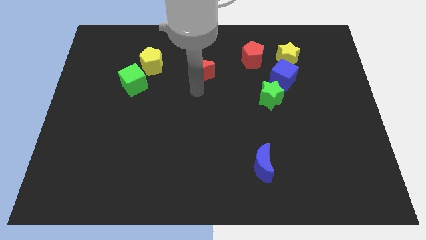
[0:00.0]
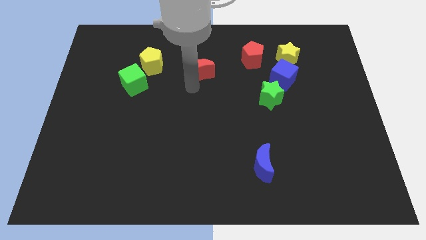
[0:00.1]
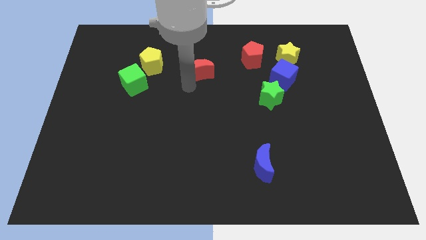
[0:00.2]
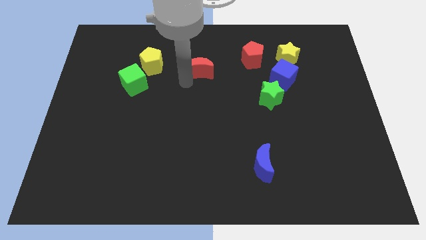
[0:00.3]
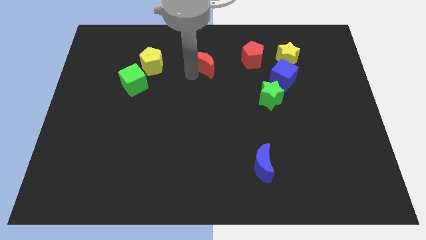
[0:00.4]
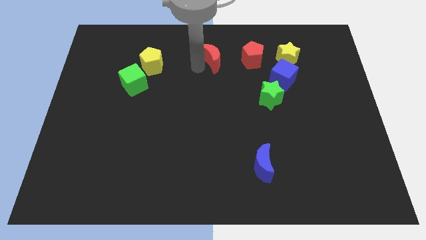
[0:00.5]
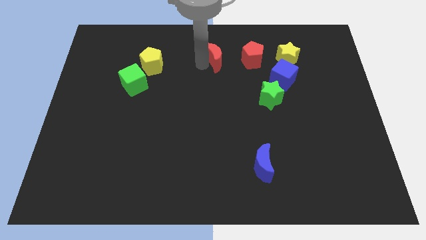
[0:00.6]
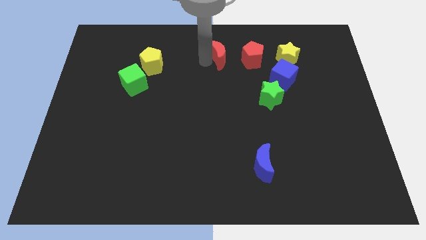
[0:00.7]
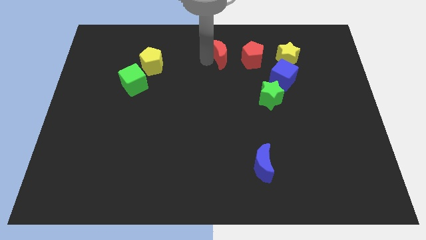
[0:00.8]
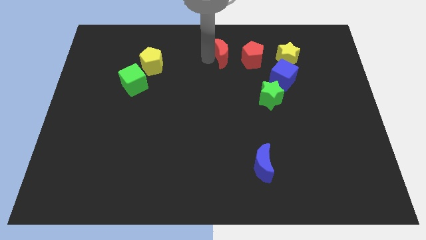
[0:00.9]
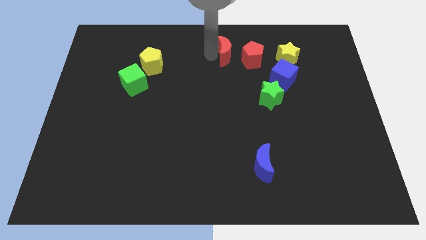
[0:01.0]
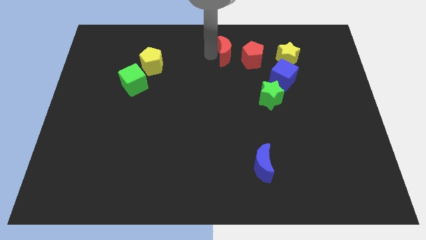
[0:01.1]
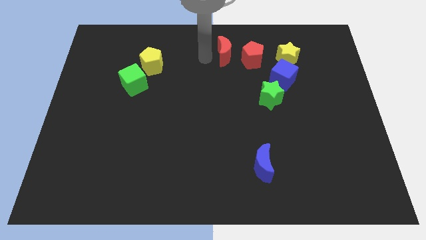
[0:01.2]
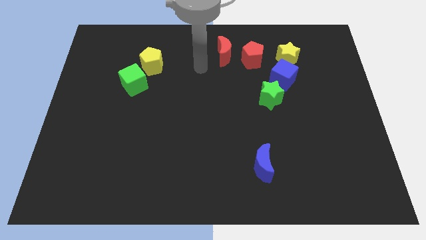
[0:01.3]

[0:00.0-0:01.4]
place the red crescent left to the red pentagon to form a horizontal line

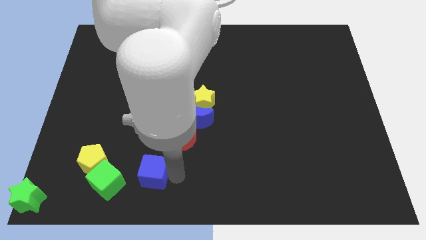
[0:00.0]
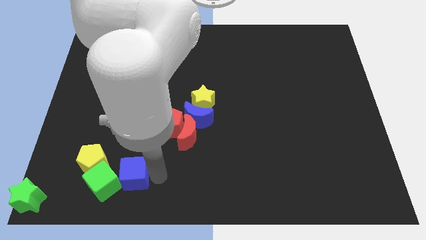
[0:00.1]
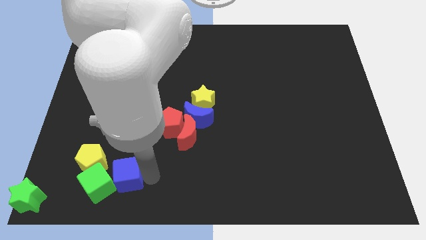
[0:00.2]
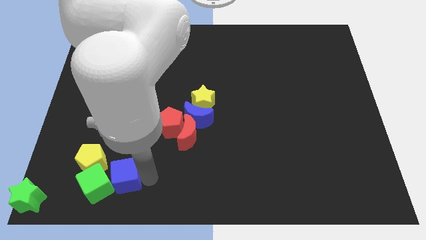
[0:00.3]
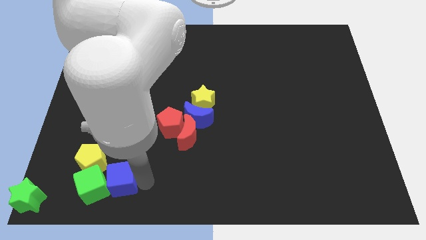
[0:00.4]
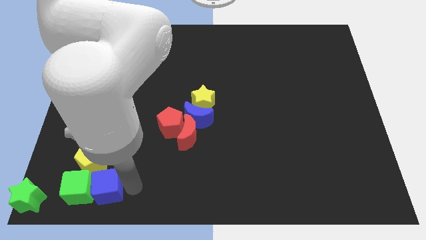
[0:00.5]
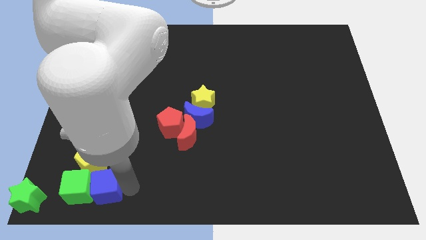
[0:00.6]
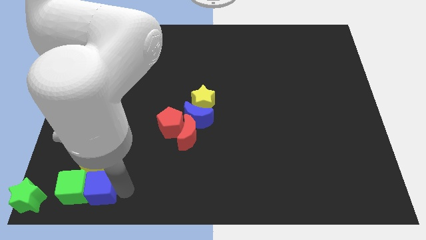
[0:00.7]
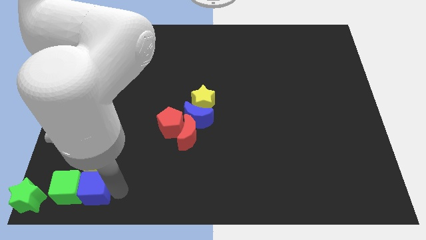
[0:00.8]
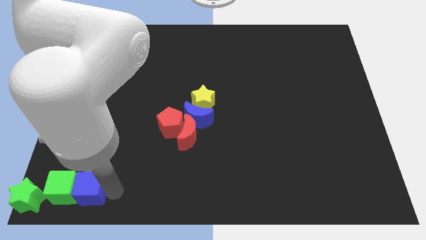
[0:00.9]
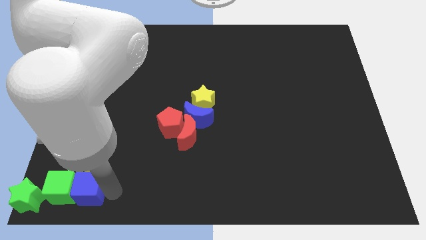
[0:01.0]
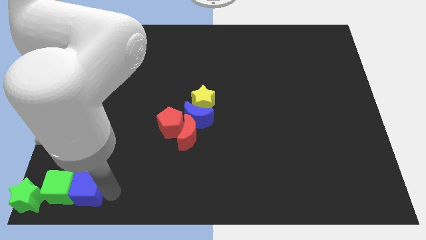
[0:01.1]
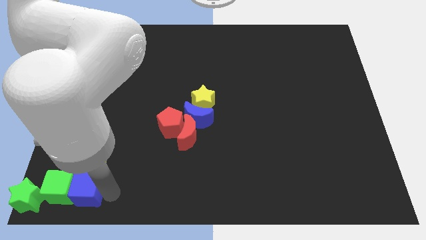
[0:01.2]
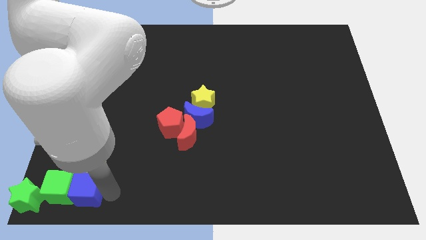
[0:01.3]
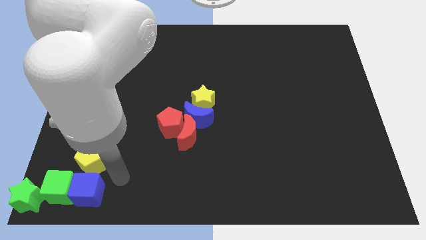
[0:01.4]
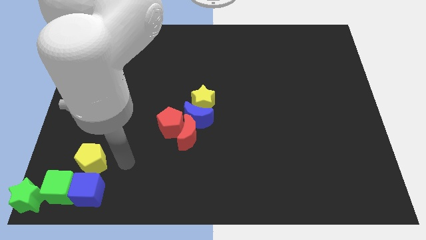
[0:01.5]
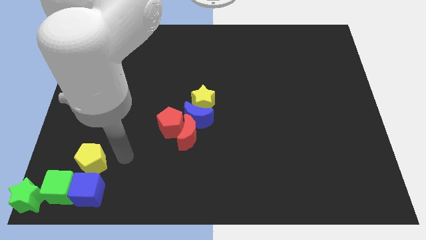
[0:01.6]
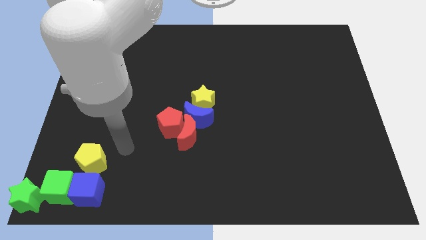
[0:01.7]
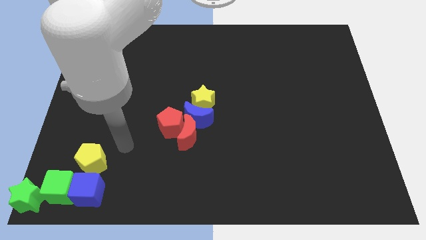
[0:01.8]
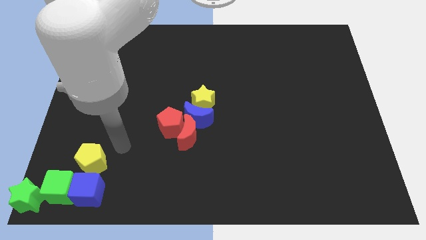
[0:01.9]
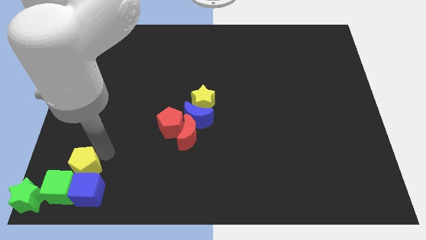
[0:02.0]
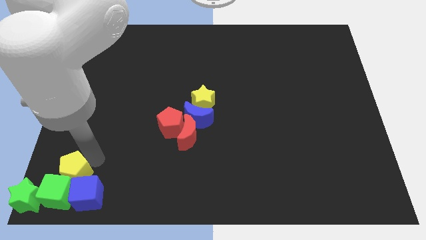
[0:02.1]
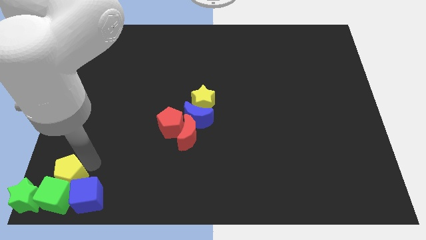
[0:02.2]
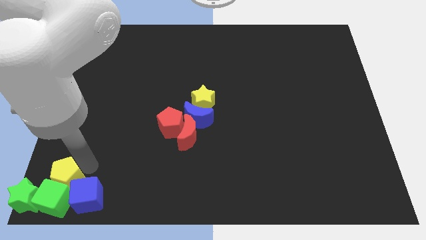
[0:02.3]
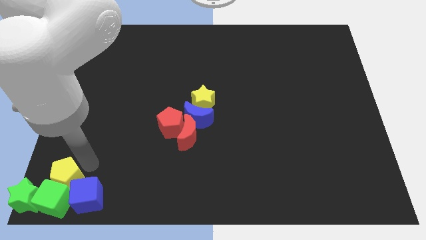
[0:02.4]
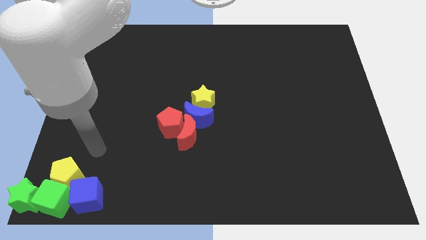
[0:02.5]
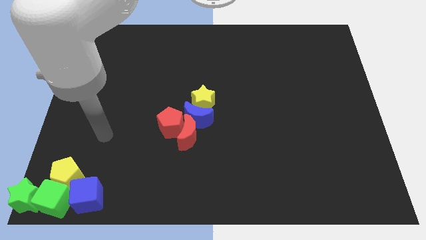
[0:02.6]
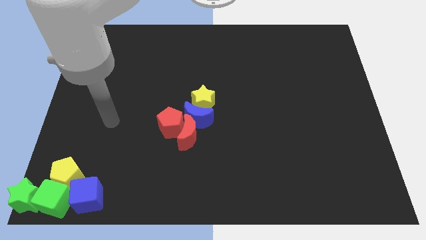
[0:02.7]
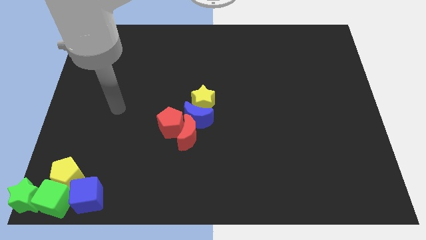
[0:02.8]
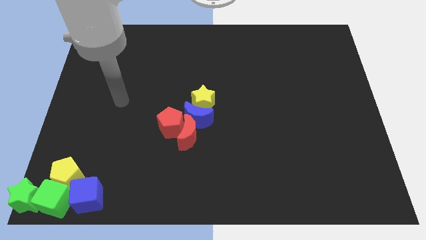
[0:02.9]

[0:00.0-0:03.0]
group up the green blocksyellow pentagon and blue cube at bottom left corner of the board

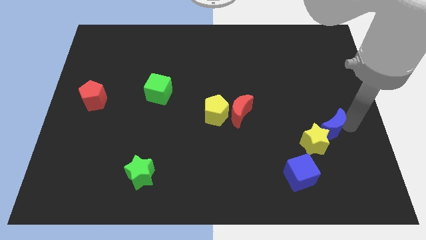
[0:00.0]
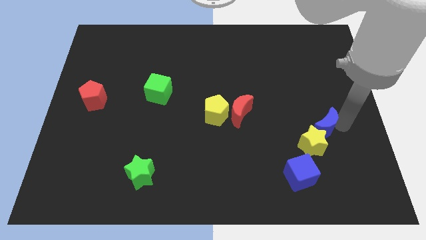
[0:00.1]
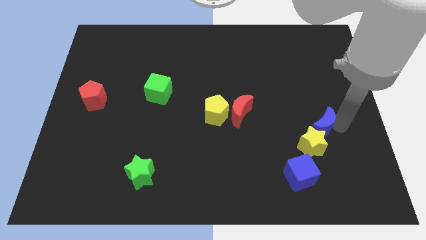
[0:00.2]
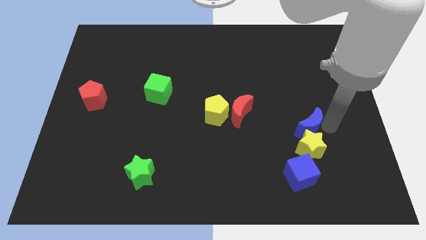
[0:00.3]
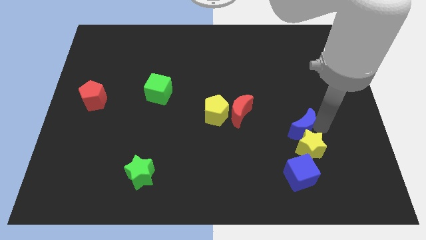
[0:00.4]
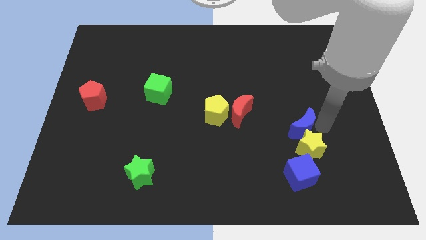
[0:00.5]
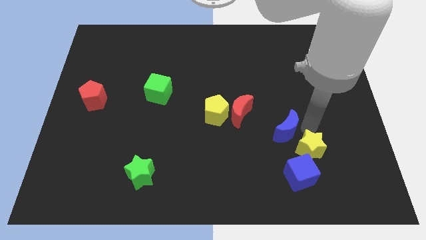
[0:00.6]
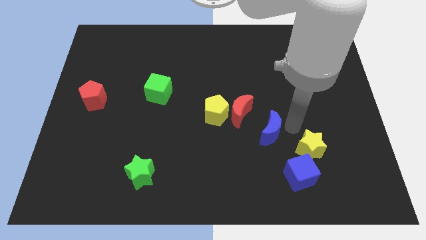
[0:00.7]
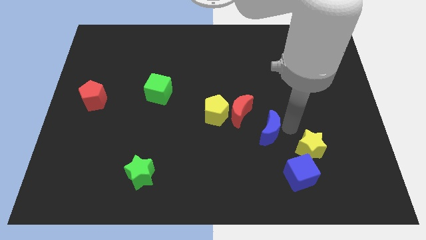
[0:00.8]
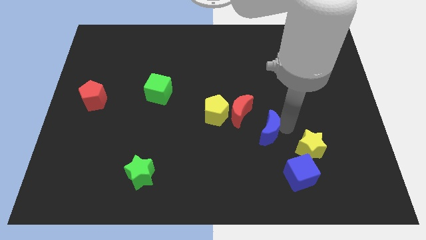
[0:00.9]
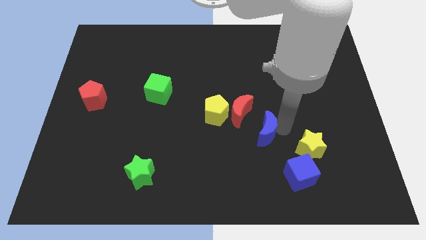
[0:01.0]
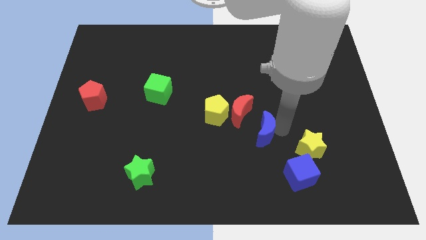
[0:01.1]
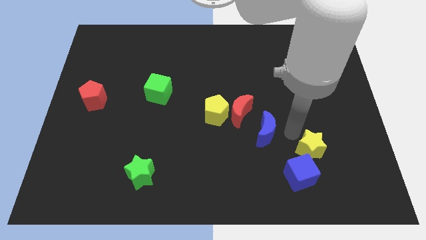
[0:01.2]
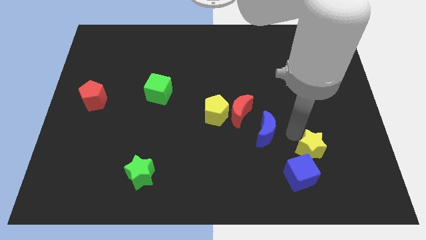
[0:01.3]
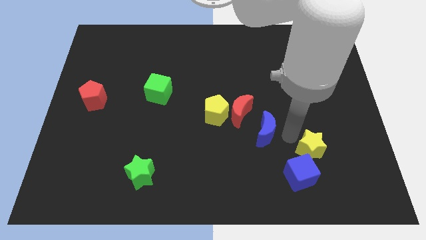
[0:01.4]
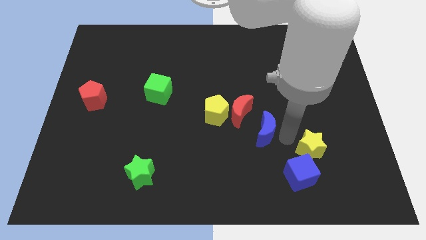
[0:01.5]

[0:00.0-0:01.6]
place the blue crescent diagonal to the green star

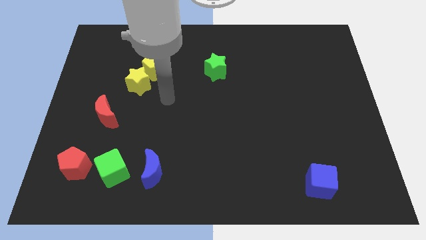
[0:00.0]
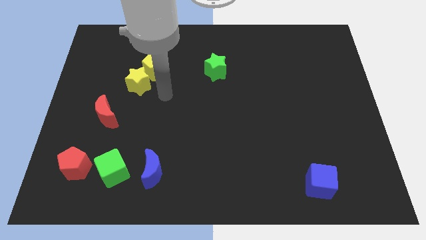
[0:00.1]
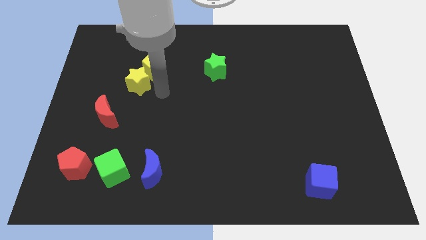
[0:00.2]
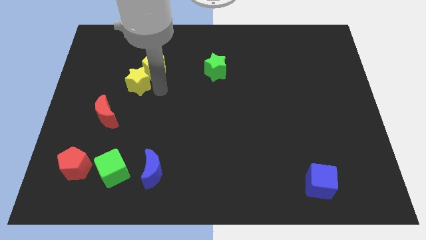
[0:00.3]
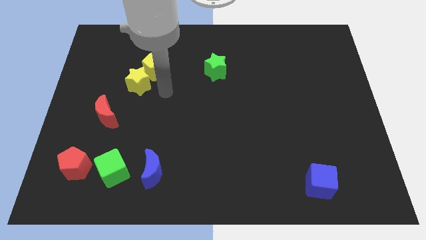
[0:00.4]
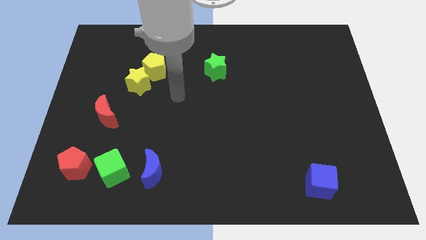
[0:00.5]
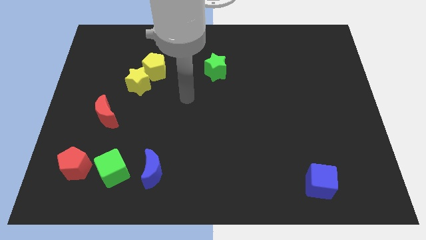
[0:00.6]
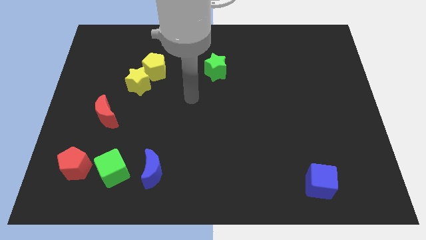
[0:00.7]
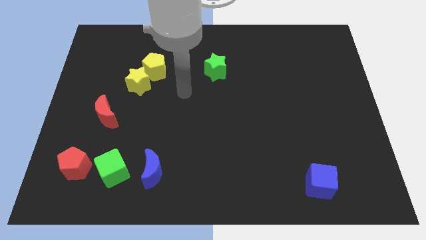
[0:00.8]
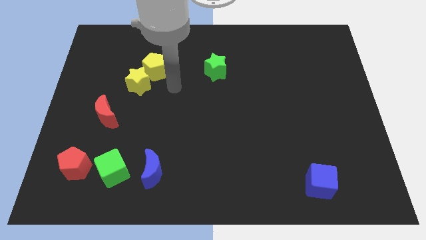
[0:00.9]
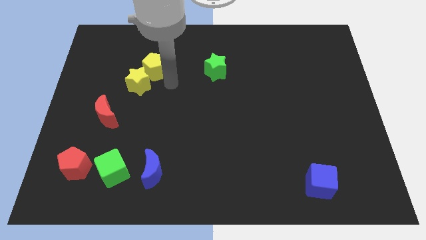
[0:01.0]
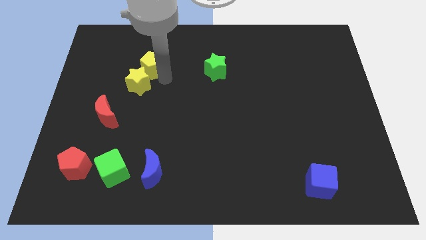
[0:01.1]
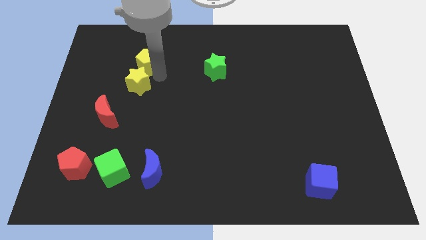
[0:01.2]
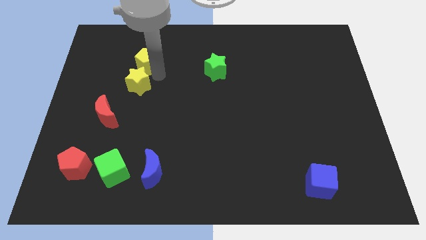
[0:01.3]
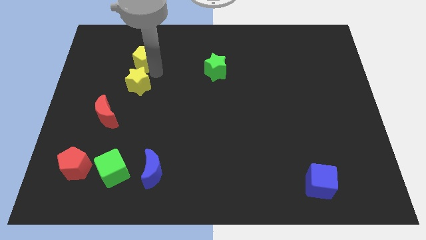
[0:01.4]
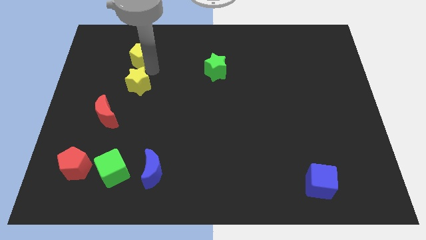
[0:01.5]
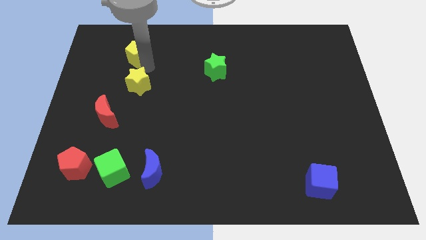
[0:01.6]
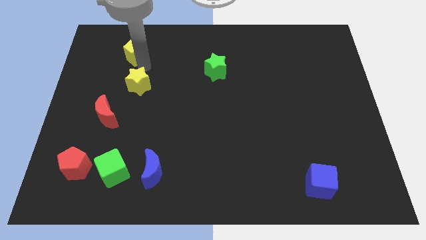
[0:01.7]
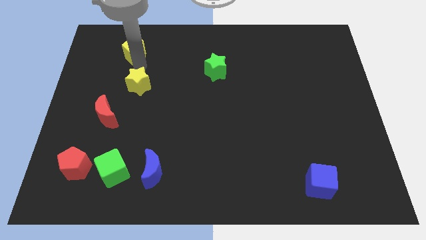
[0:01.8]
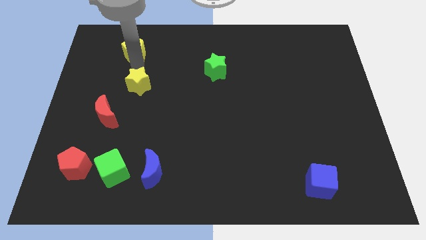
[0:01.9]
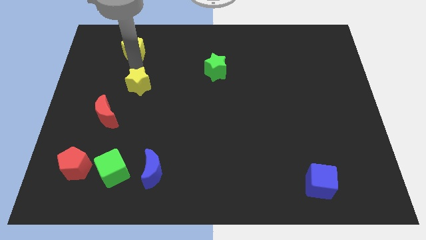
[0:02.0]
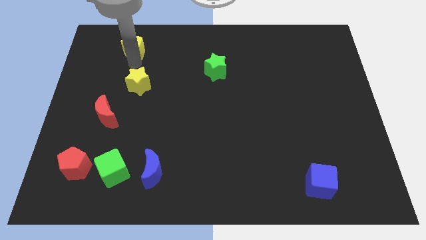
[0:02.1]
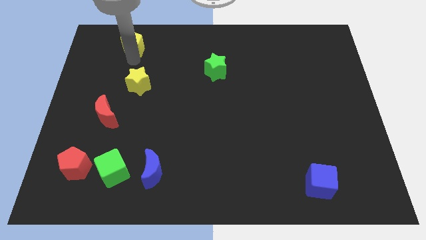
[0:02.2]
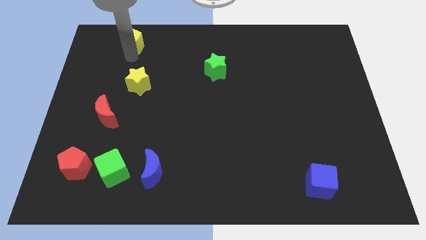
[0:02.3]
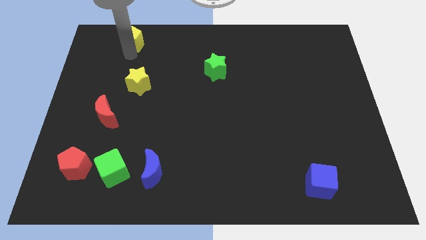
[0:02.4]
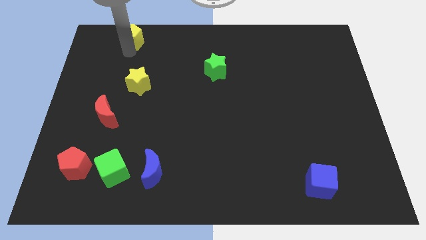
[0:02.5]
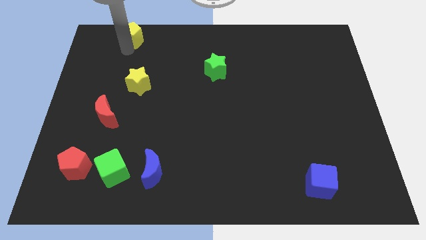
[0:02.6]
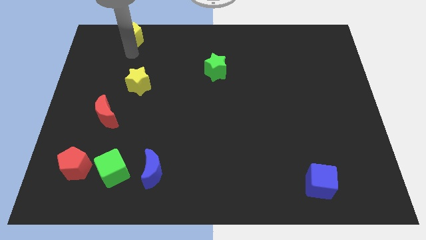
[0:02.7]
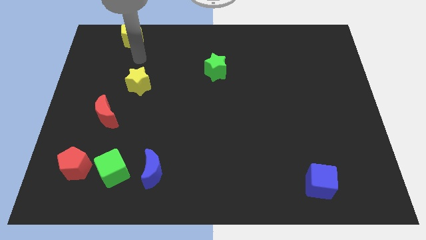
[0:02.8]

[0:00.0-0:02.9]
push the yellow pentagon to the top left of the board
